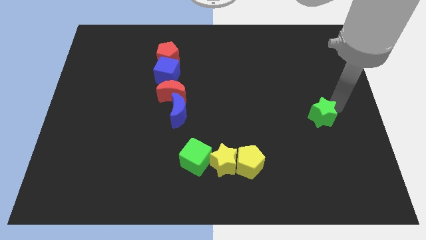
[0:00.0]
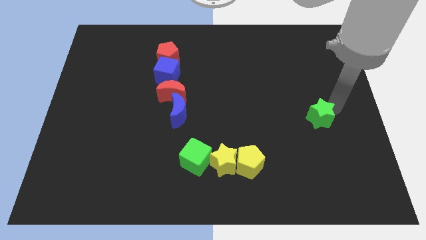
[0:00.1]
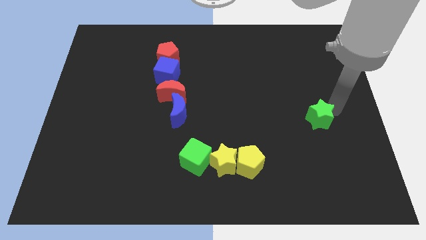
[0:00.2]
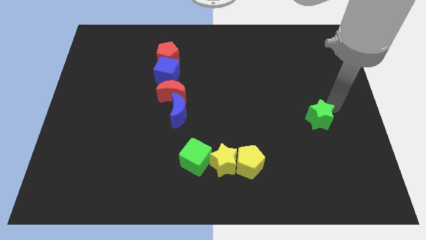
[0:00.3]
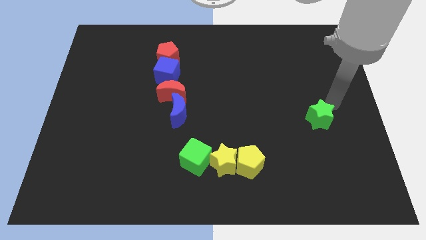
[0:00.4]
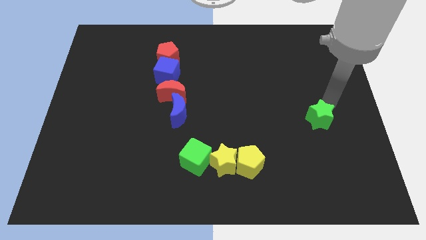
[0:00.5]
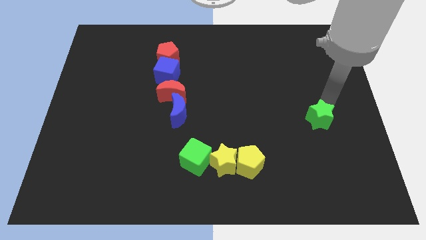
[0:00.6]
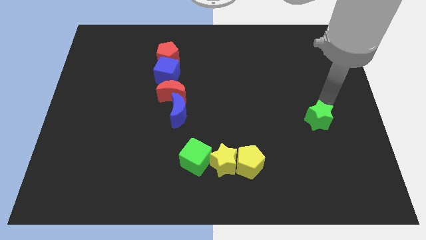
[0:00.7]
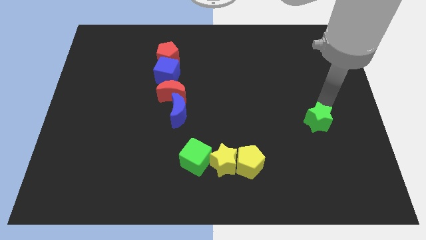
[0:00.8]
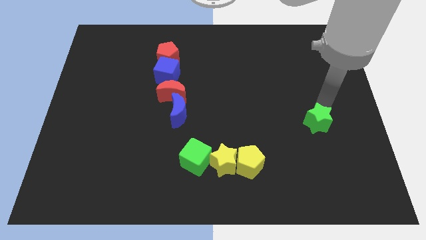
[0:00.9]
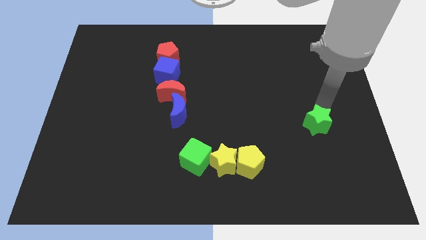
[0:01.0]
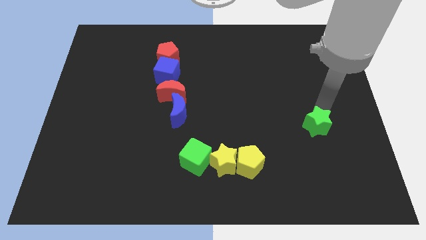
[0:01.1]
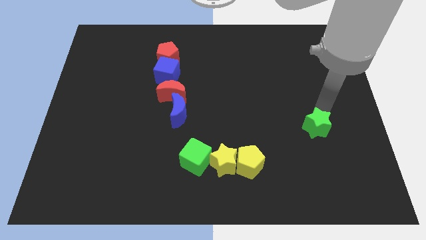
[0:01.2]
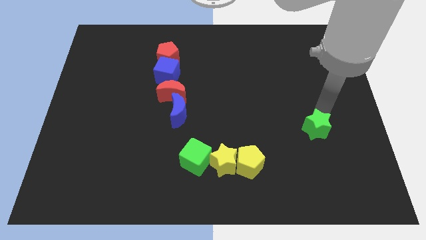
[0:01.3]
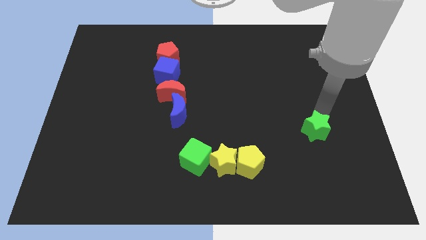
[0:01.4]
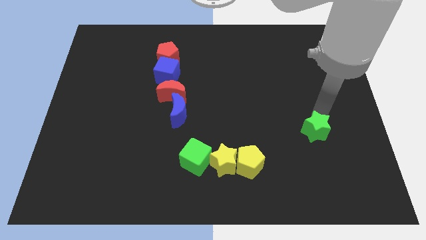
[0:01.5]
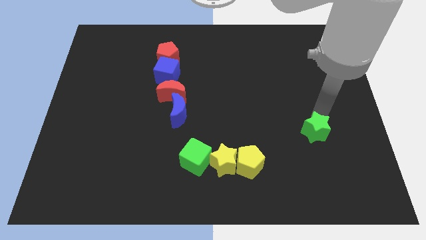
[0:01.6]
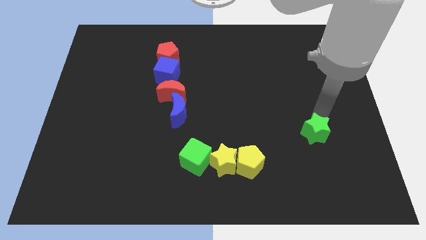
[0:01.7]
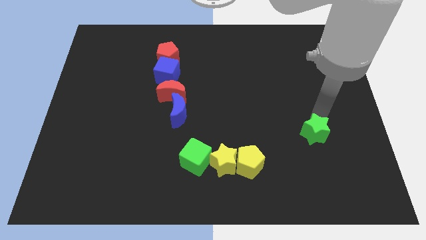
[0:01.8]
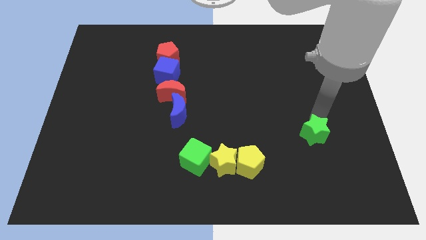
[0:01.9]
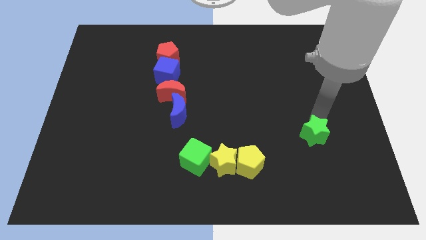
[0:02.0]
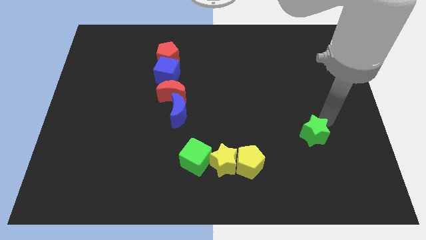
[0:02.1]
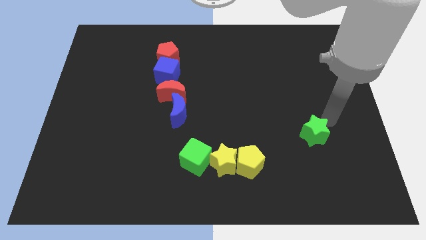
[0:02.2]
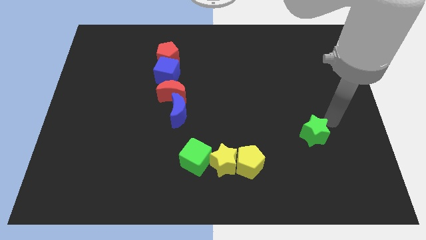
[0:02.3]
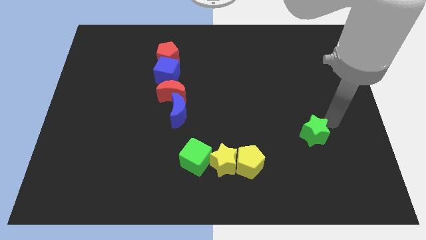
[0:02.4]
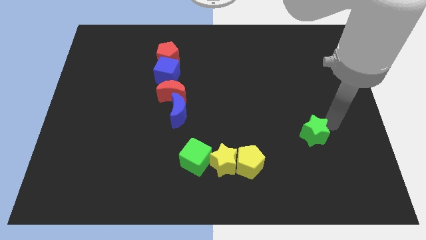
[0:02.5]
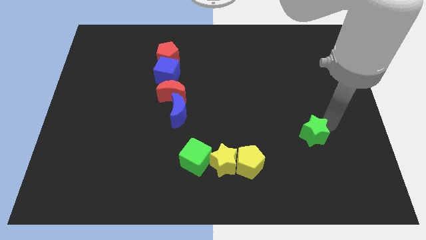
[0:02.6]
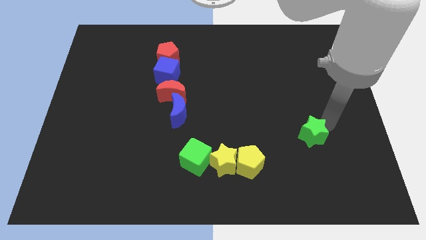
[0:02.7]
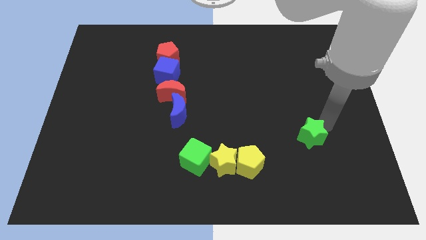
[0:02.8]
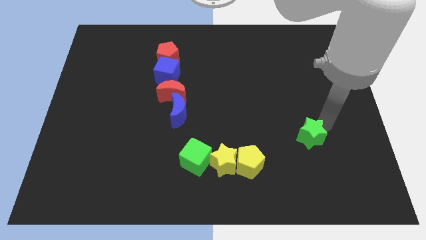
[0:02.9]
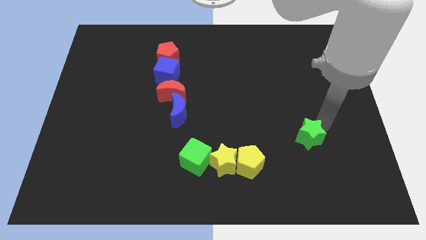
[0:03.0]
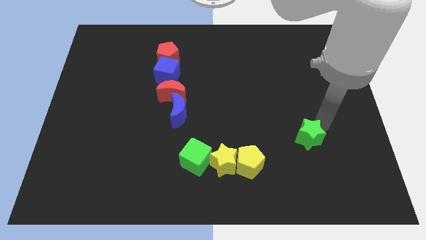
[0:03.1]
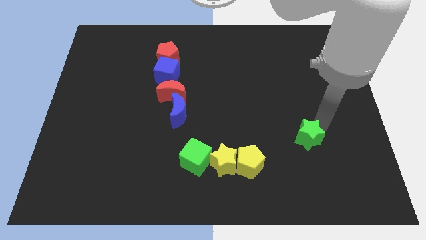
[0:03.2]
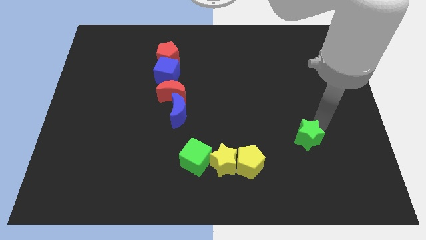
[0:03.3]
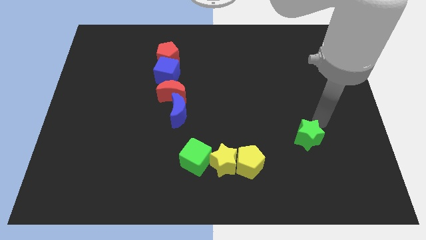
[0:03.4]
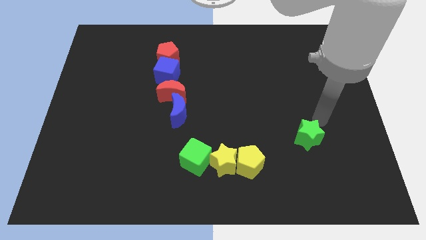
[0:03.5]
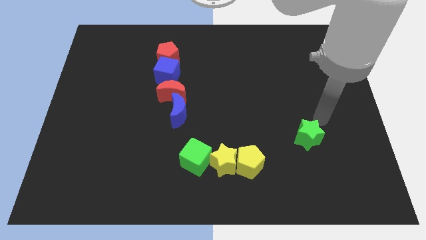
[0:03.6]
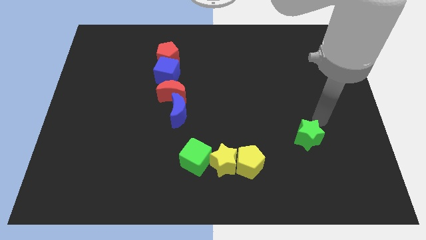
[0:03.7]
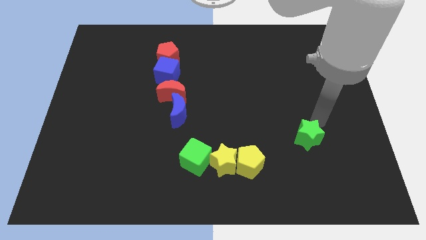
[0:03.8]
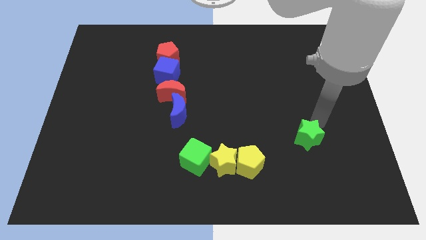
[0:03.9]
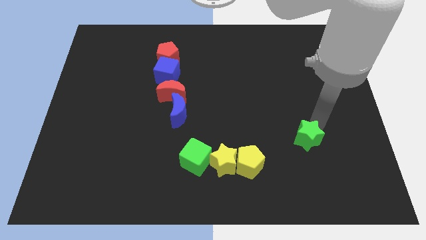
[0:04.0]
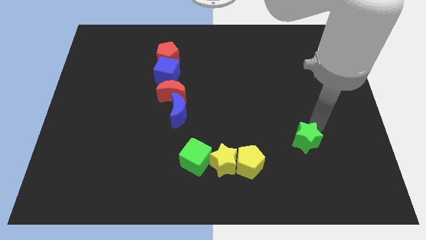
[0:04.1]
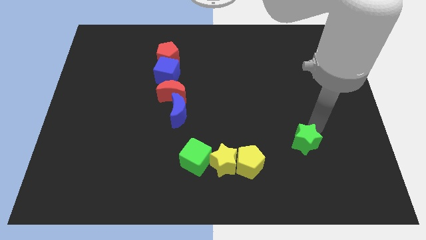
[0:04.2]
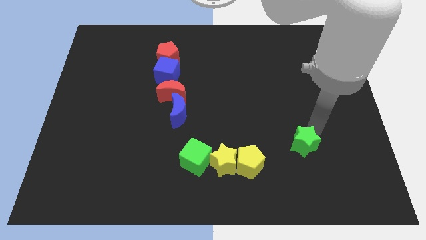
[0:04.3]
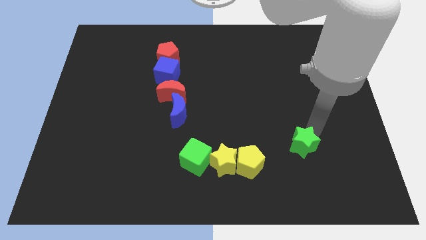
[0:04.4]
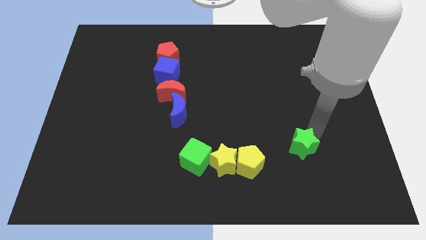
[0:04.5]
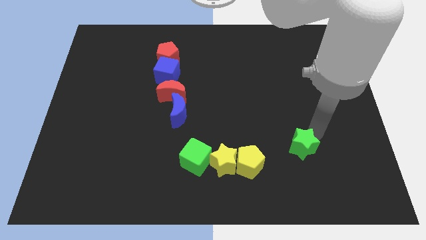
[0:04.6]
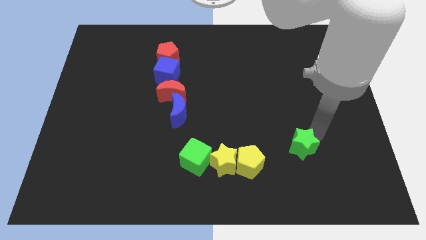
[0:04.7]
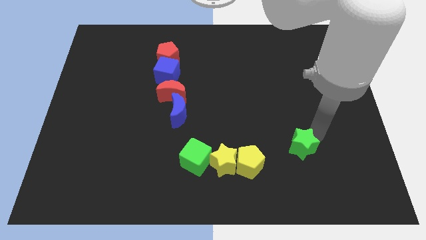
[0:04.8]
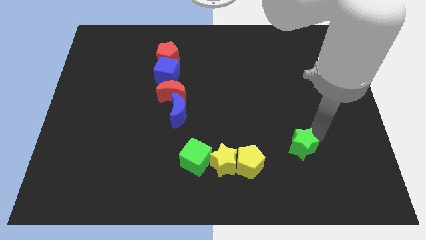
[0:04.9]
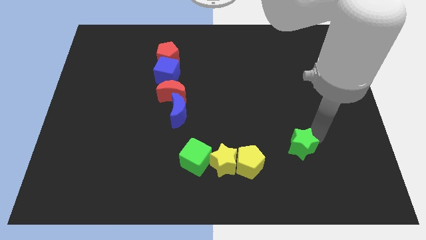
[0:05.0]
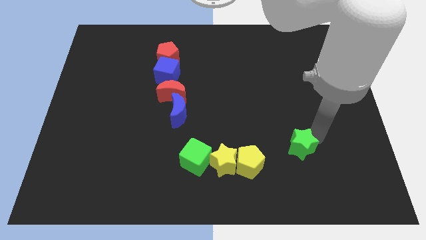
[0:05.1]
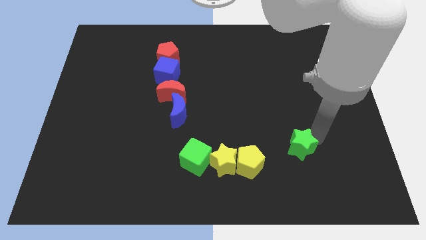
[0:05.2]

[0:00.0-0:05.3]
move the green star towards the right side of the yellow pentagon

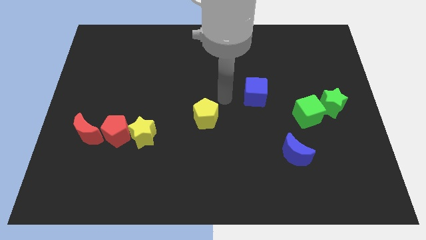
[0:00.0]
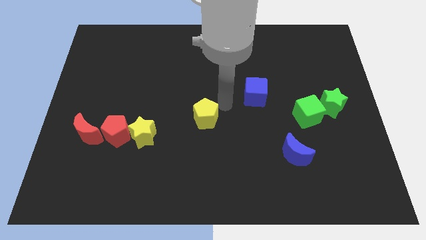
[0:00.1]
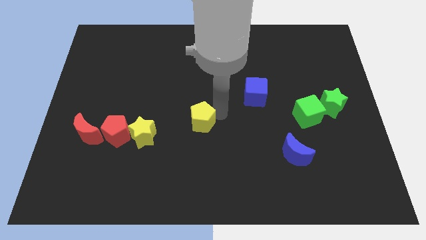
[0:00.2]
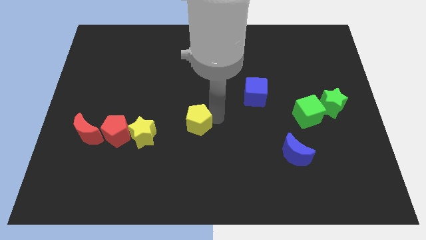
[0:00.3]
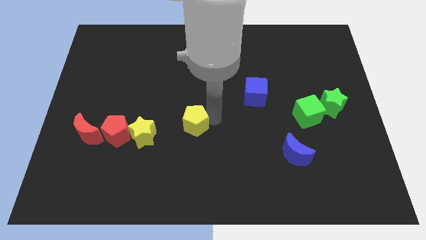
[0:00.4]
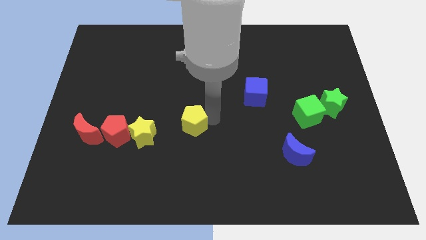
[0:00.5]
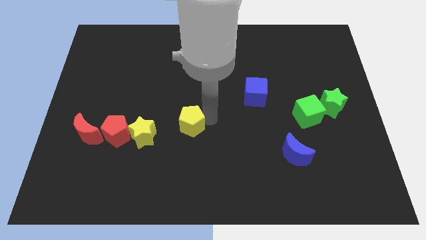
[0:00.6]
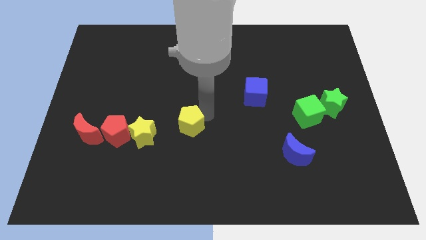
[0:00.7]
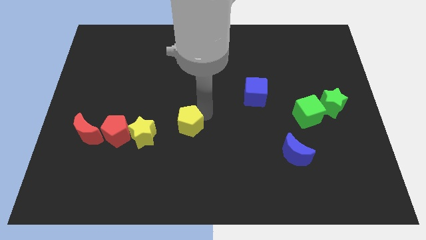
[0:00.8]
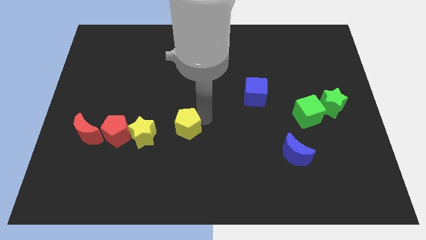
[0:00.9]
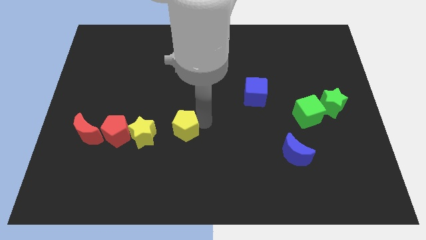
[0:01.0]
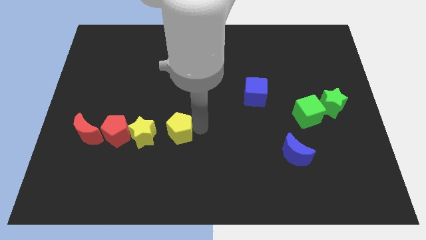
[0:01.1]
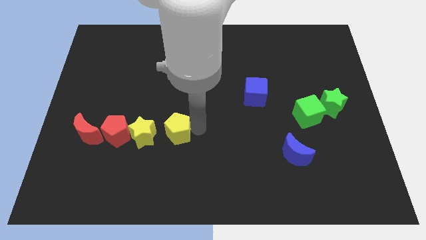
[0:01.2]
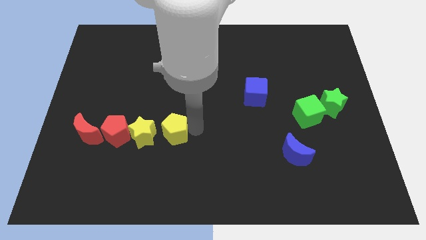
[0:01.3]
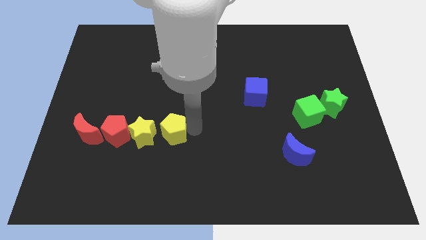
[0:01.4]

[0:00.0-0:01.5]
move yellow pentagon towards yellow star

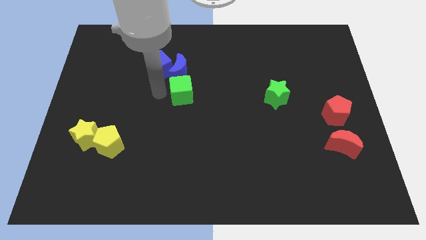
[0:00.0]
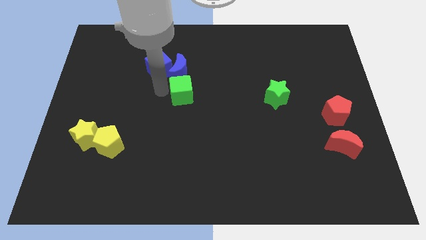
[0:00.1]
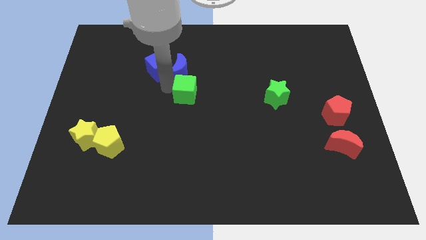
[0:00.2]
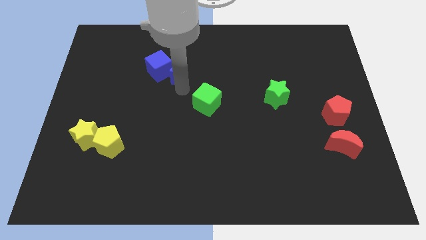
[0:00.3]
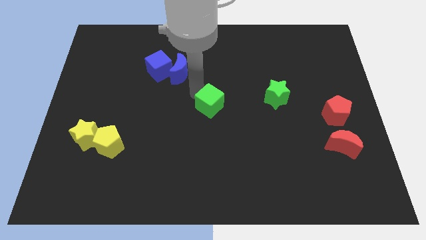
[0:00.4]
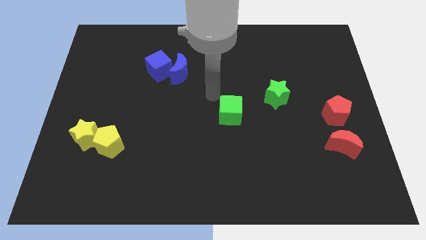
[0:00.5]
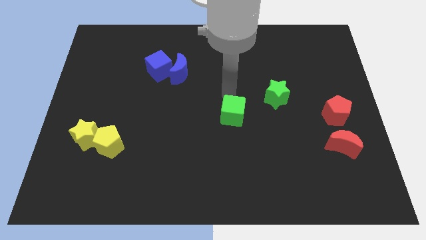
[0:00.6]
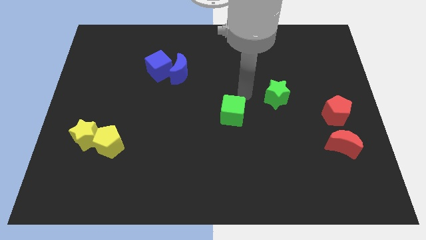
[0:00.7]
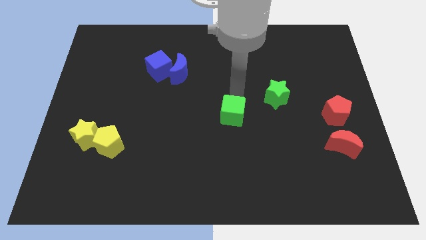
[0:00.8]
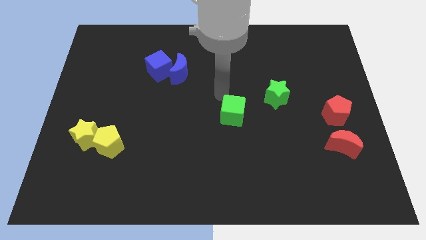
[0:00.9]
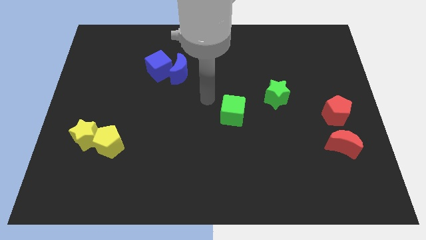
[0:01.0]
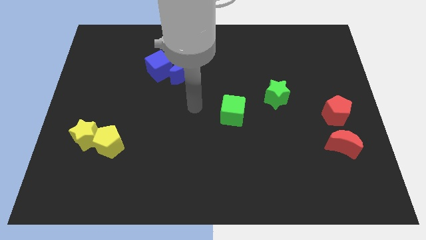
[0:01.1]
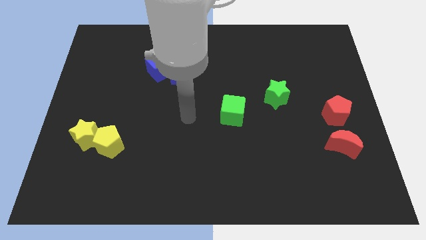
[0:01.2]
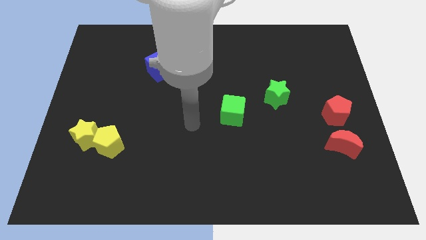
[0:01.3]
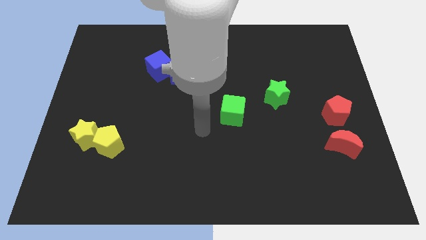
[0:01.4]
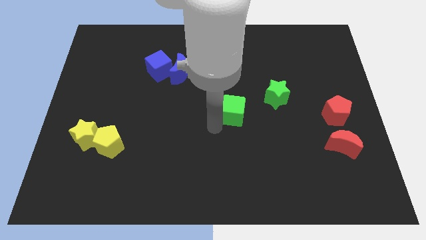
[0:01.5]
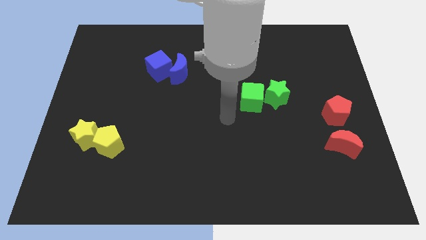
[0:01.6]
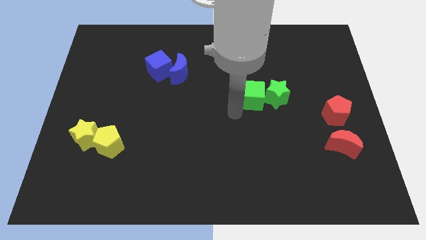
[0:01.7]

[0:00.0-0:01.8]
put the green cube into green star to the left

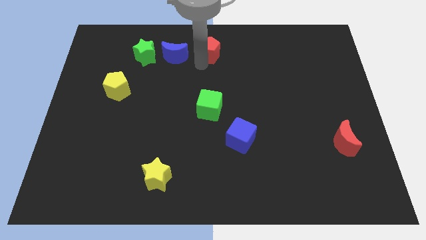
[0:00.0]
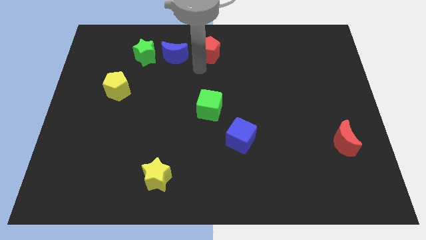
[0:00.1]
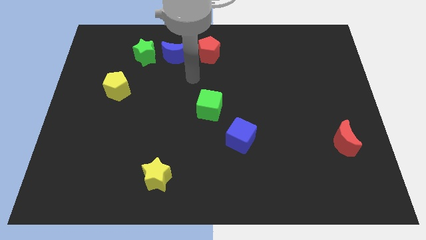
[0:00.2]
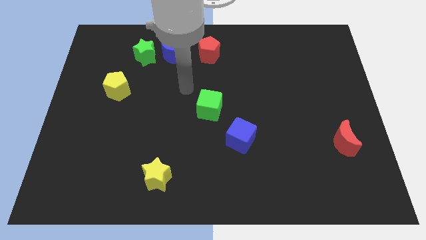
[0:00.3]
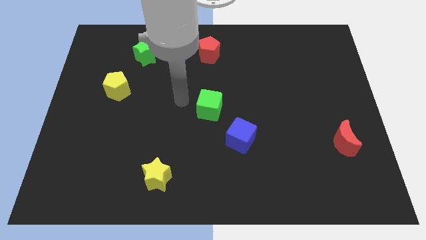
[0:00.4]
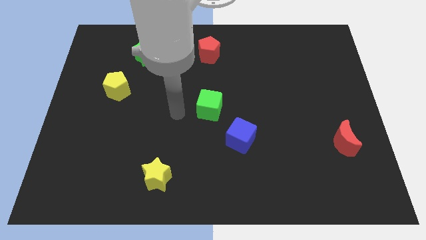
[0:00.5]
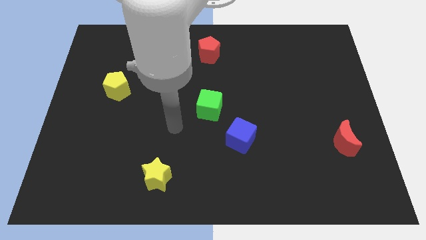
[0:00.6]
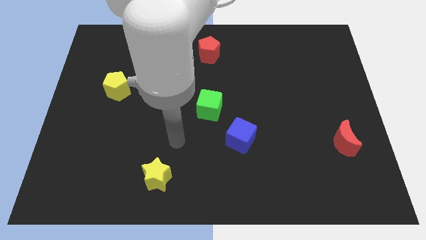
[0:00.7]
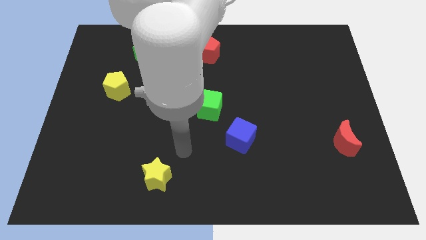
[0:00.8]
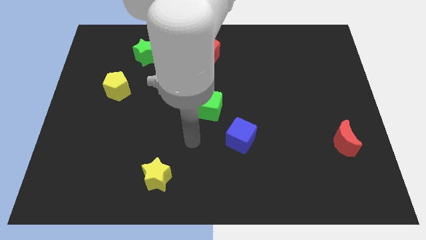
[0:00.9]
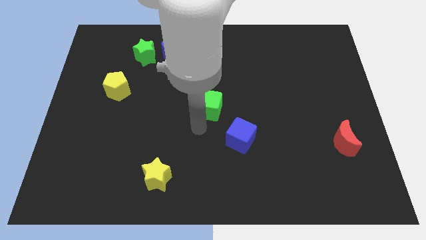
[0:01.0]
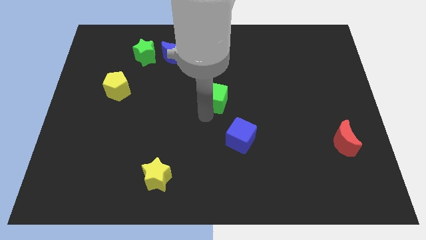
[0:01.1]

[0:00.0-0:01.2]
place the arm below the green cube
